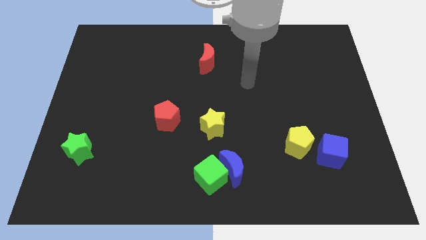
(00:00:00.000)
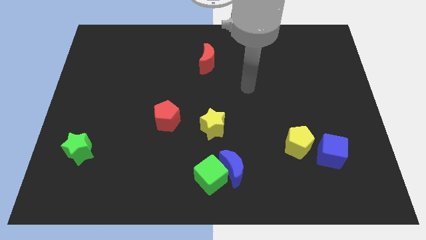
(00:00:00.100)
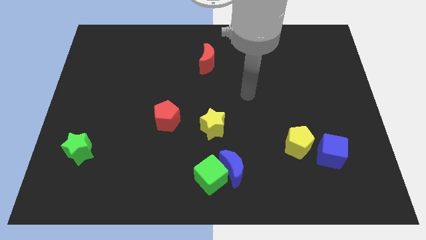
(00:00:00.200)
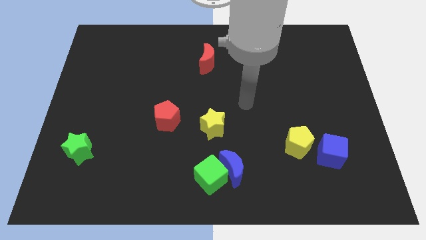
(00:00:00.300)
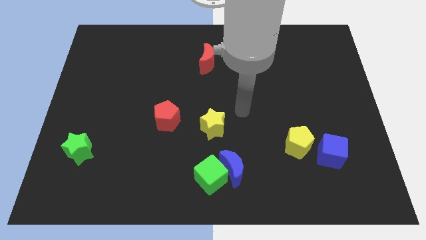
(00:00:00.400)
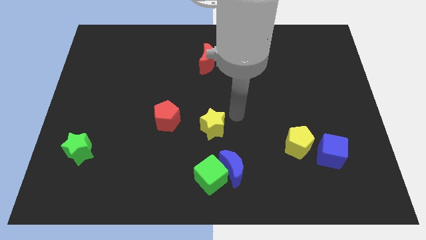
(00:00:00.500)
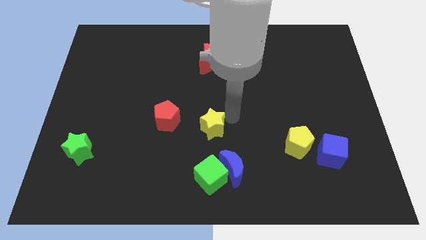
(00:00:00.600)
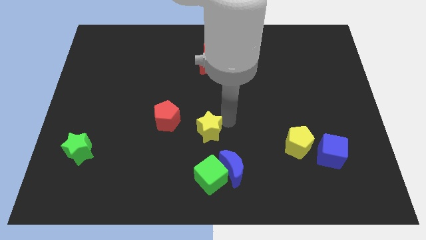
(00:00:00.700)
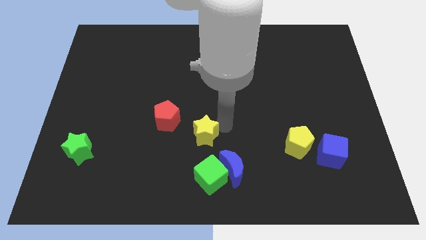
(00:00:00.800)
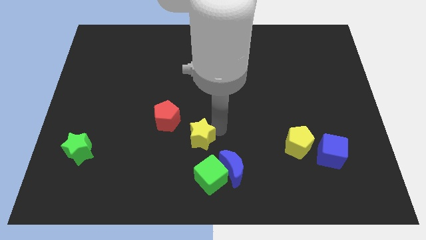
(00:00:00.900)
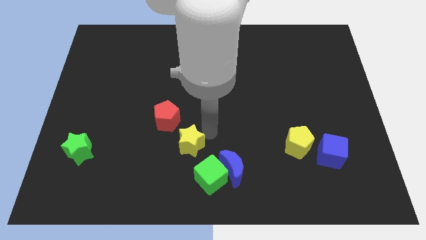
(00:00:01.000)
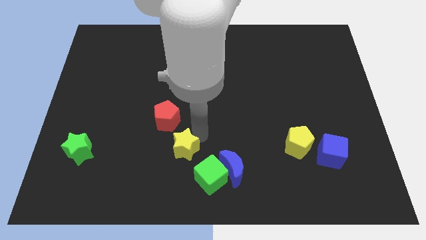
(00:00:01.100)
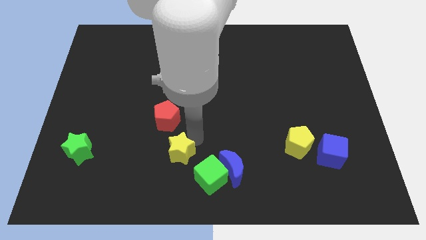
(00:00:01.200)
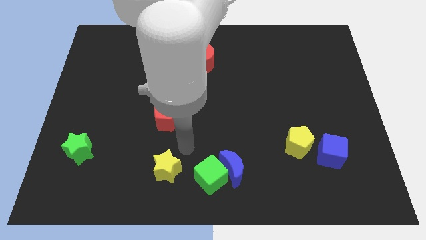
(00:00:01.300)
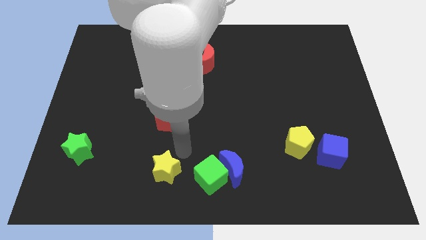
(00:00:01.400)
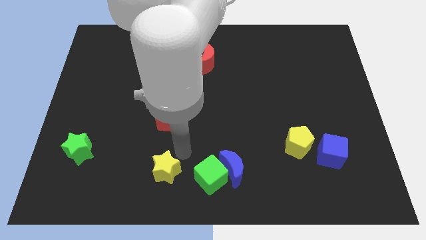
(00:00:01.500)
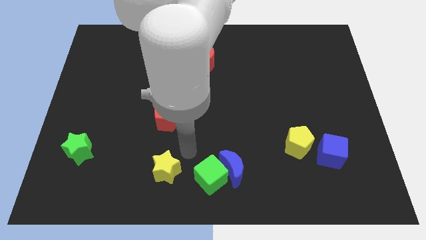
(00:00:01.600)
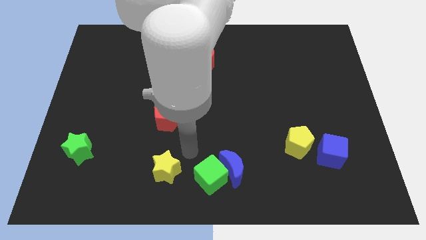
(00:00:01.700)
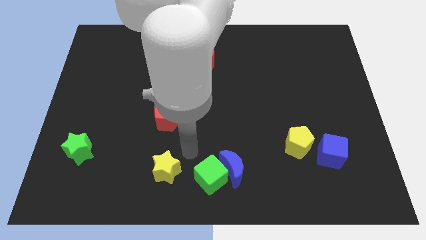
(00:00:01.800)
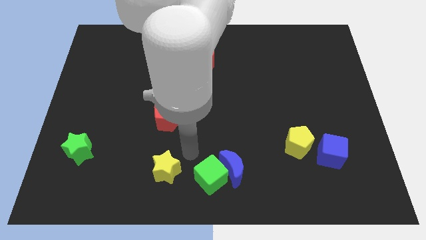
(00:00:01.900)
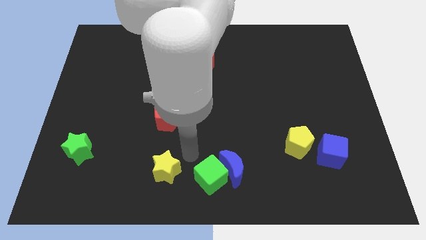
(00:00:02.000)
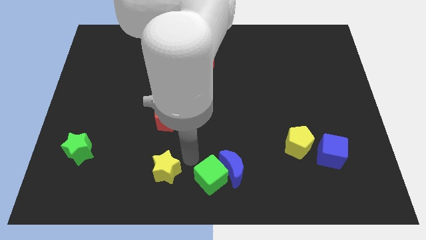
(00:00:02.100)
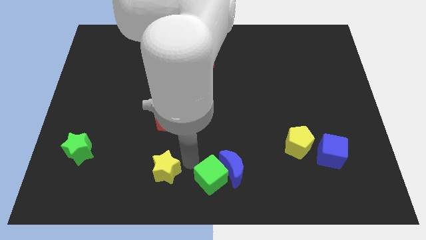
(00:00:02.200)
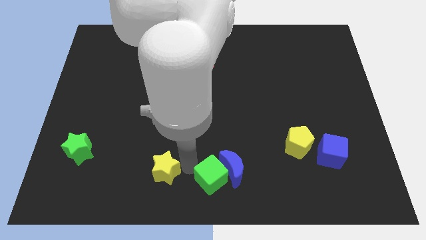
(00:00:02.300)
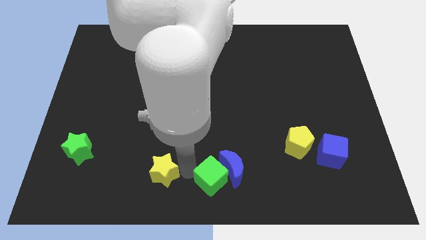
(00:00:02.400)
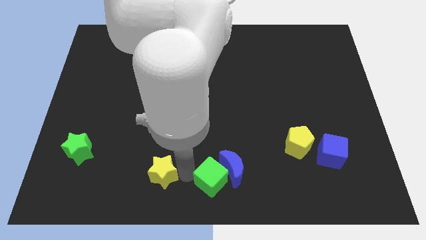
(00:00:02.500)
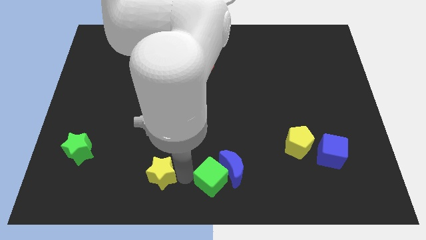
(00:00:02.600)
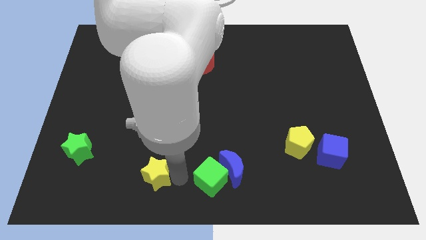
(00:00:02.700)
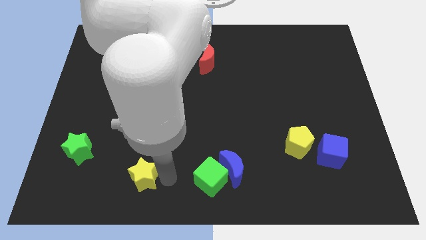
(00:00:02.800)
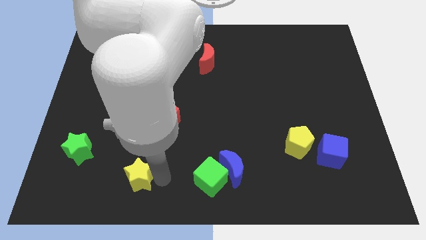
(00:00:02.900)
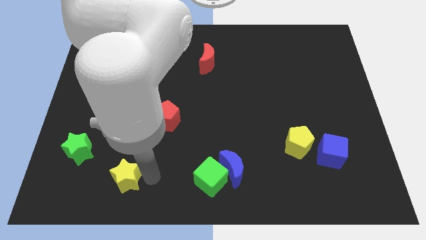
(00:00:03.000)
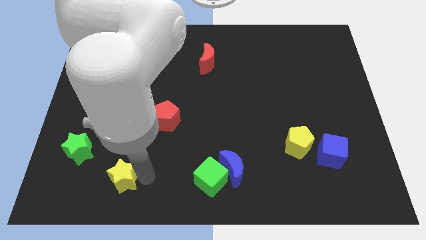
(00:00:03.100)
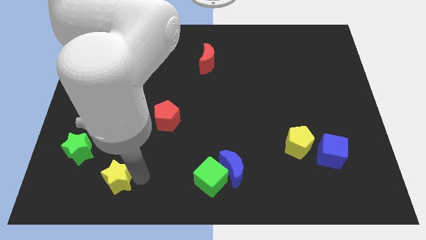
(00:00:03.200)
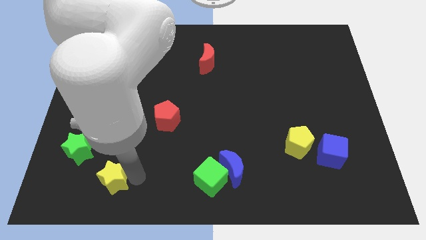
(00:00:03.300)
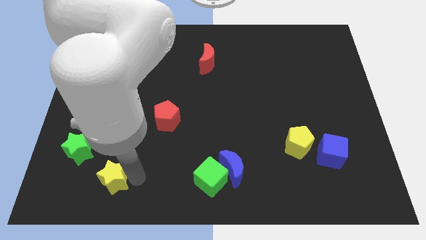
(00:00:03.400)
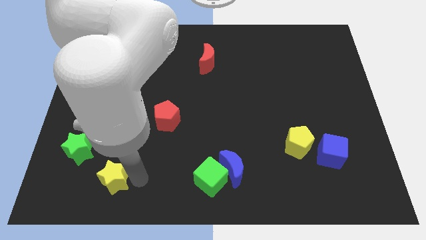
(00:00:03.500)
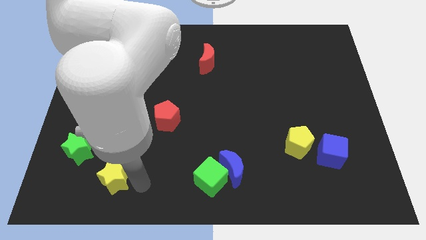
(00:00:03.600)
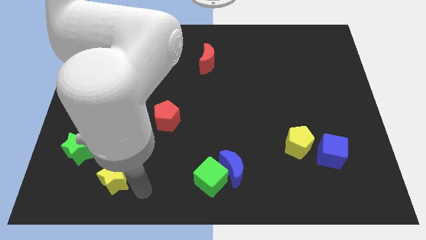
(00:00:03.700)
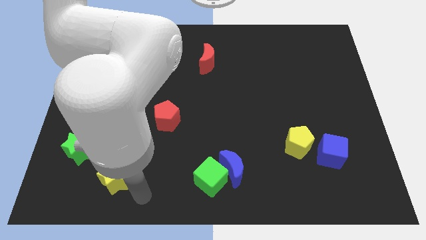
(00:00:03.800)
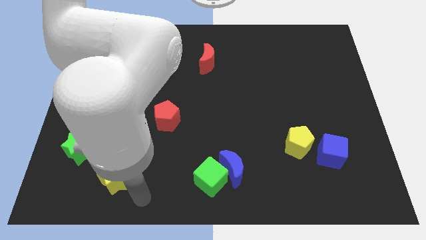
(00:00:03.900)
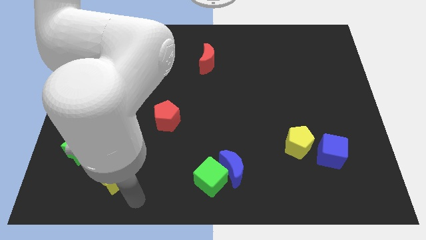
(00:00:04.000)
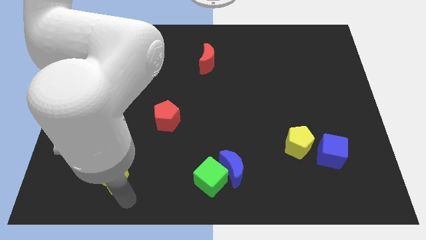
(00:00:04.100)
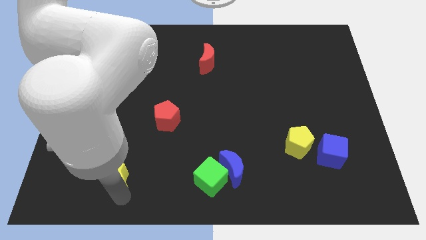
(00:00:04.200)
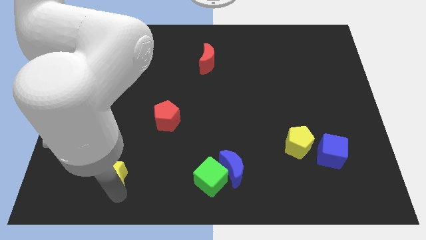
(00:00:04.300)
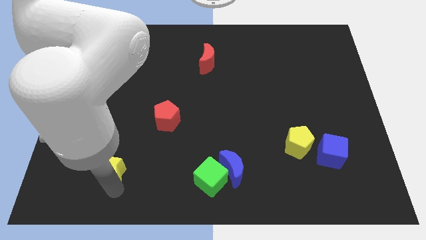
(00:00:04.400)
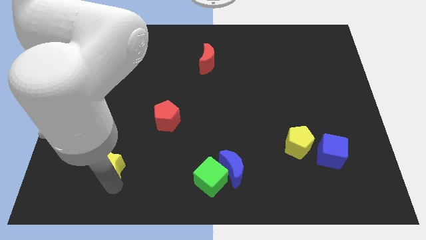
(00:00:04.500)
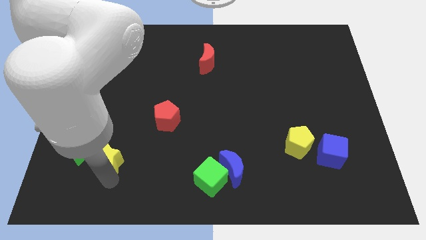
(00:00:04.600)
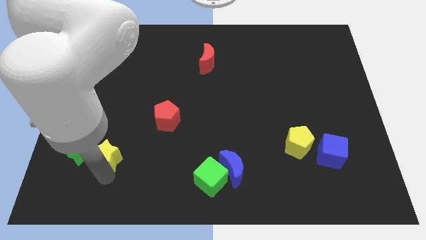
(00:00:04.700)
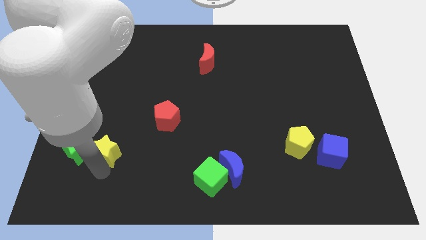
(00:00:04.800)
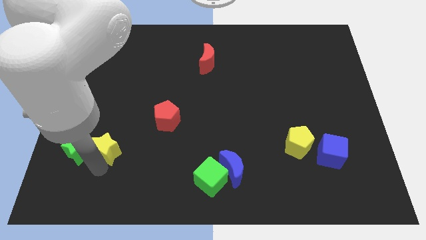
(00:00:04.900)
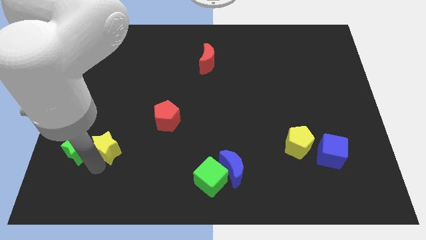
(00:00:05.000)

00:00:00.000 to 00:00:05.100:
put the yellow star next to the green star

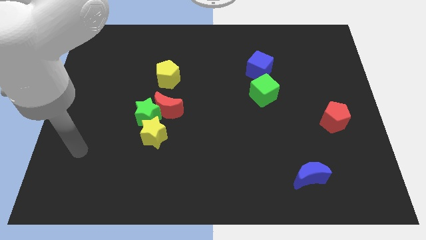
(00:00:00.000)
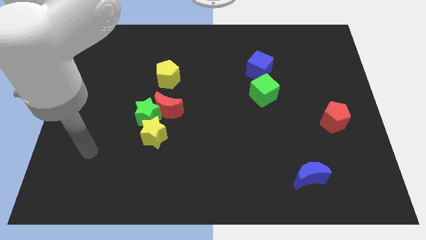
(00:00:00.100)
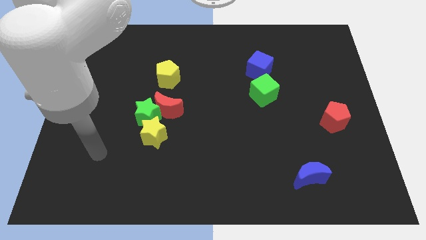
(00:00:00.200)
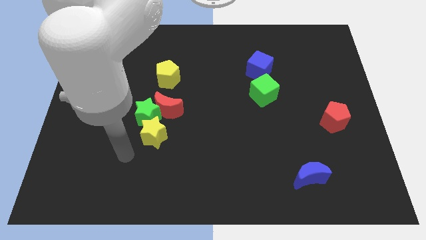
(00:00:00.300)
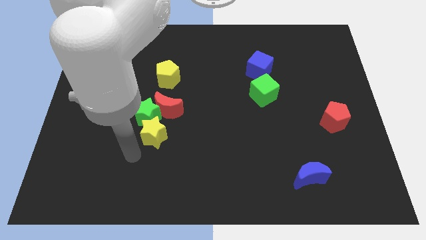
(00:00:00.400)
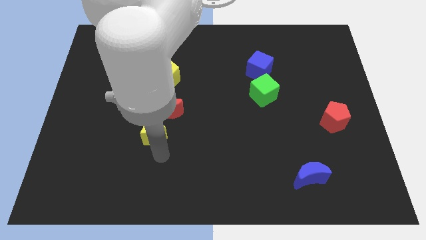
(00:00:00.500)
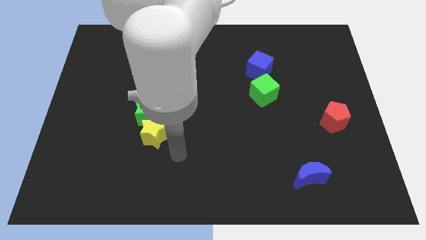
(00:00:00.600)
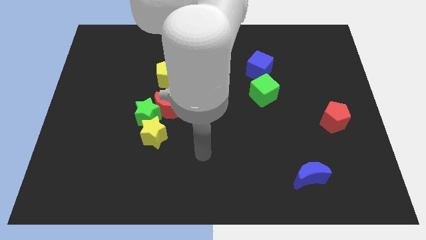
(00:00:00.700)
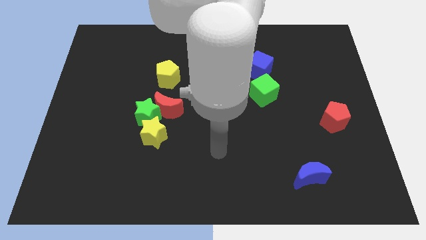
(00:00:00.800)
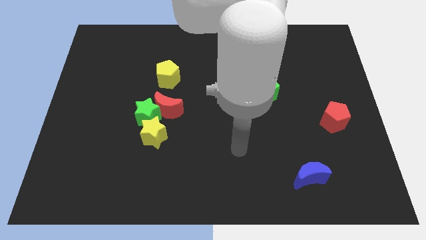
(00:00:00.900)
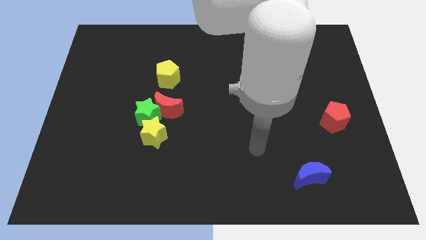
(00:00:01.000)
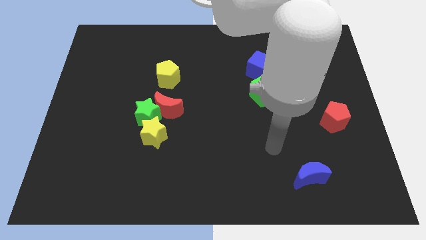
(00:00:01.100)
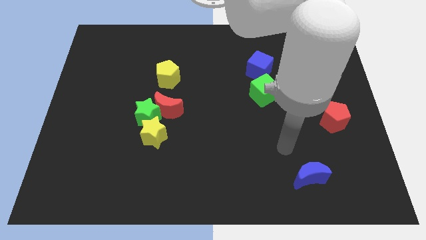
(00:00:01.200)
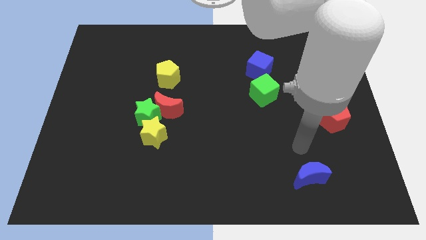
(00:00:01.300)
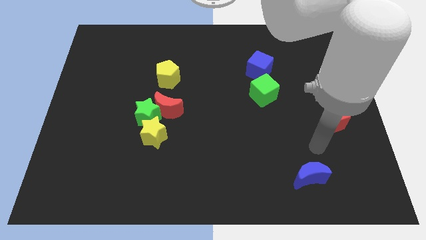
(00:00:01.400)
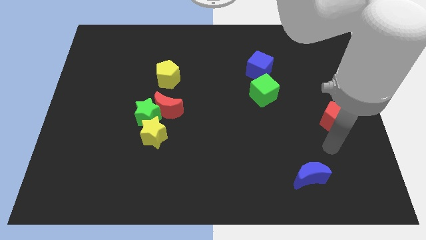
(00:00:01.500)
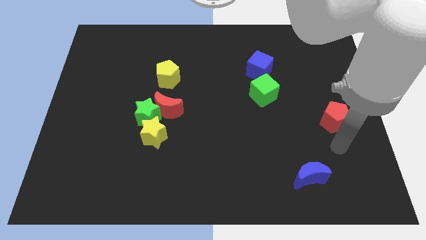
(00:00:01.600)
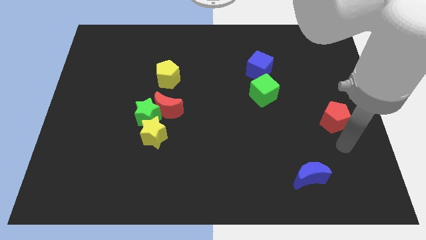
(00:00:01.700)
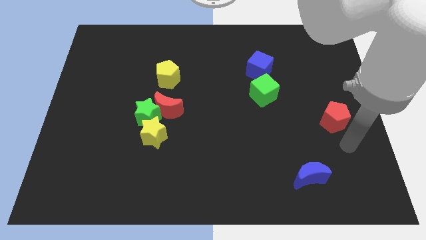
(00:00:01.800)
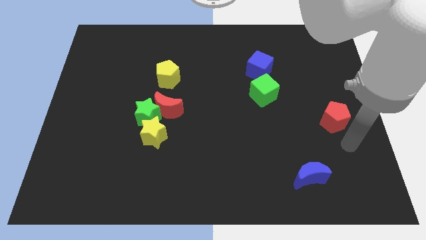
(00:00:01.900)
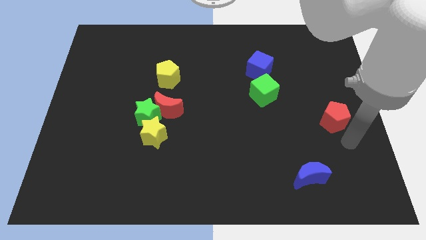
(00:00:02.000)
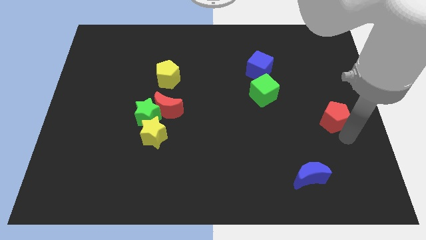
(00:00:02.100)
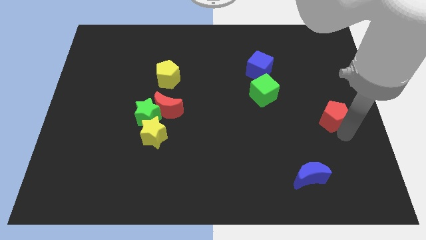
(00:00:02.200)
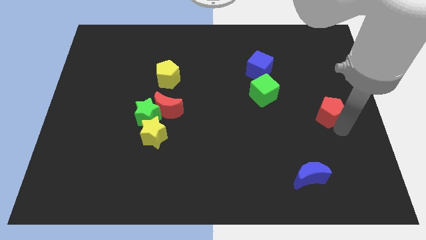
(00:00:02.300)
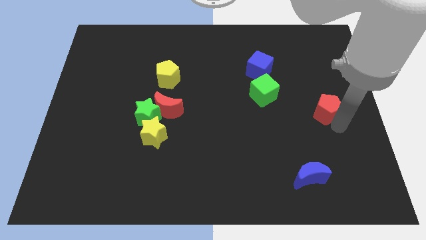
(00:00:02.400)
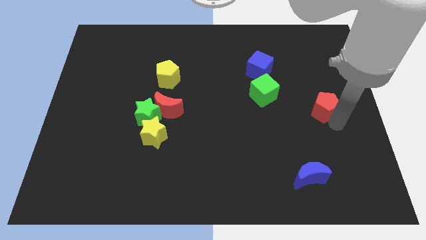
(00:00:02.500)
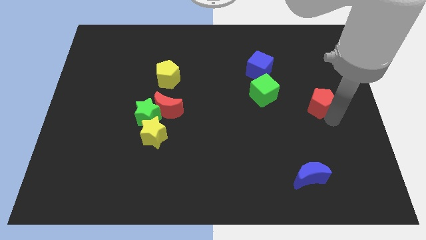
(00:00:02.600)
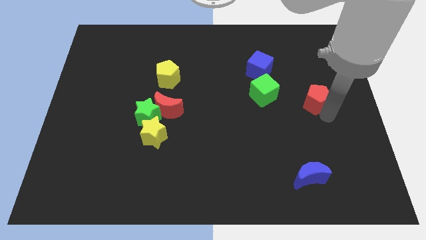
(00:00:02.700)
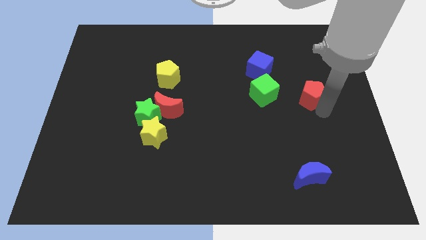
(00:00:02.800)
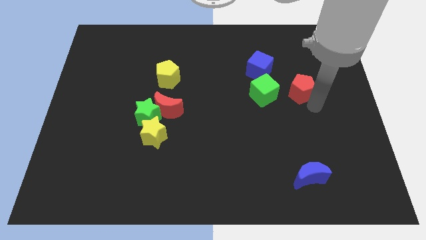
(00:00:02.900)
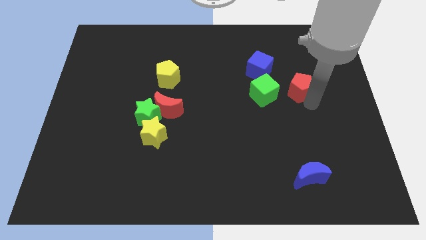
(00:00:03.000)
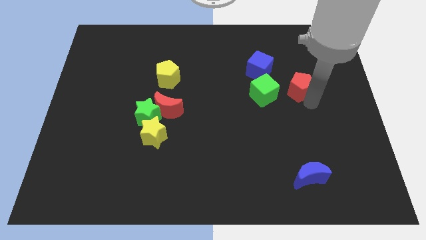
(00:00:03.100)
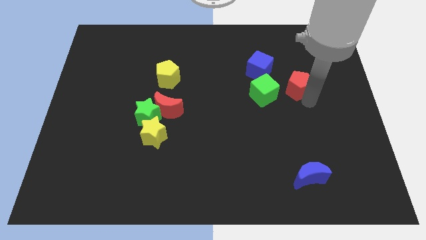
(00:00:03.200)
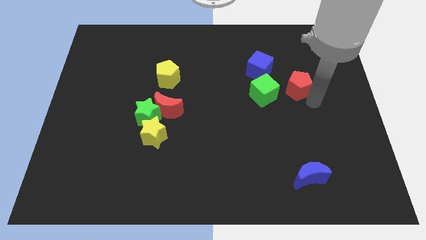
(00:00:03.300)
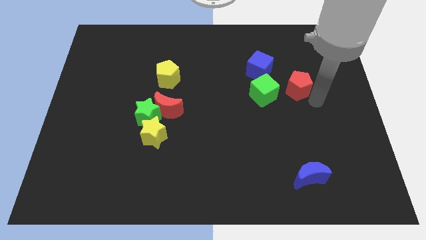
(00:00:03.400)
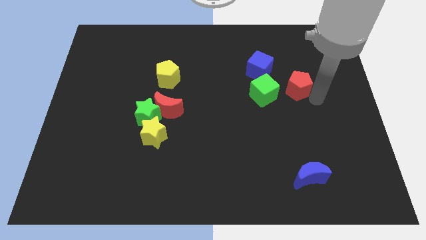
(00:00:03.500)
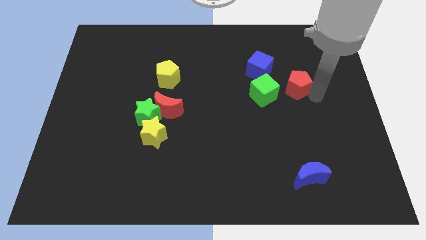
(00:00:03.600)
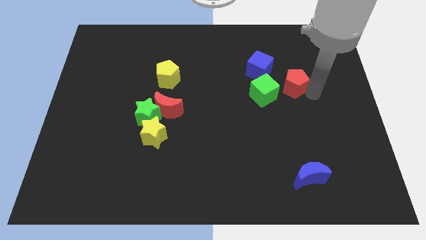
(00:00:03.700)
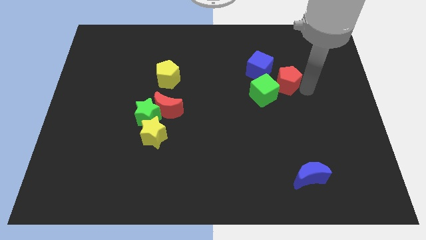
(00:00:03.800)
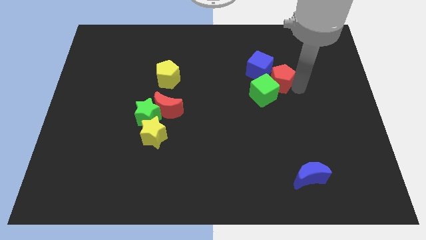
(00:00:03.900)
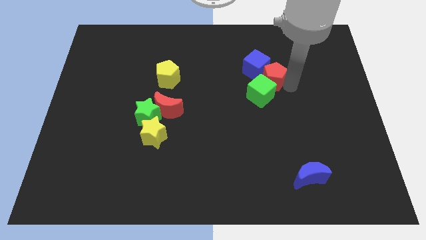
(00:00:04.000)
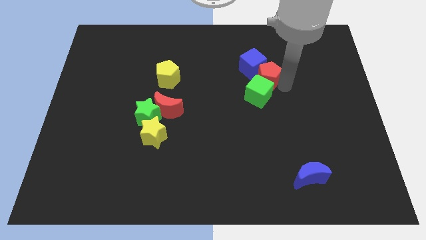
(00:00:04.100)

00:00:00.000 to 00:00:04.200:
move the red pentagon towards the blue cube
